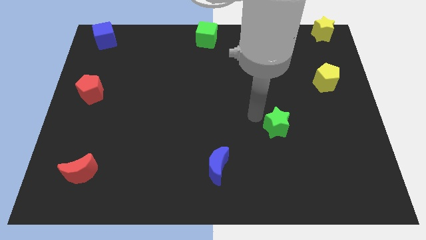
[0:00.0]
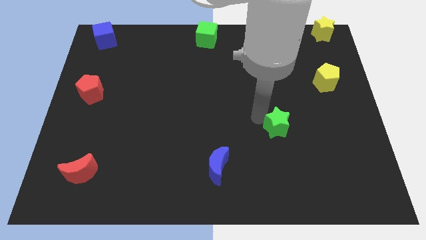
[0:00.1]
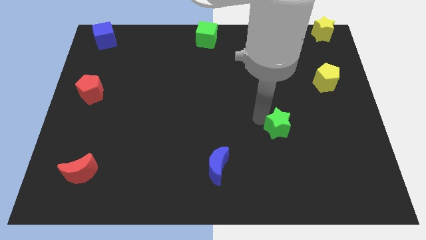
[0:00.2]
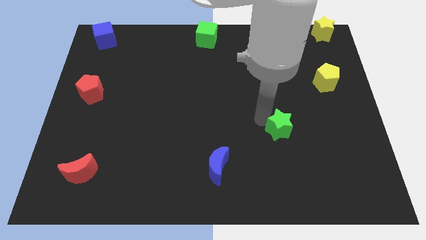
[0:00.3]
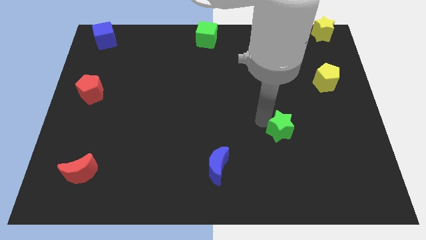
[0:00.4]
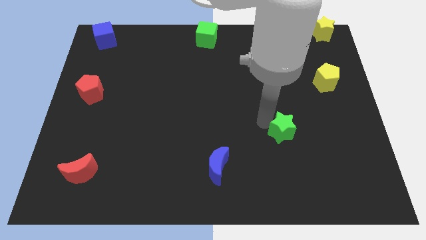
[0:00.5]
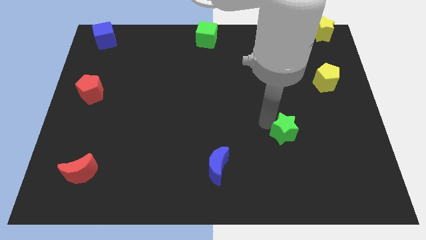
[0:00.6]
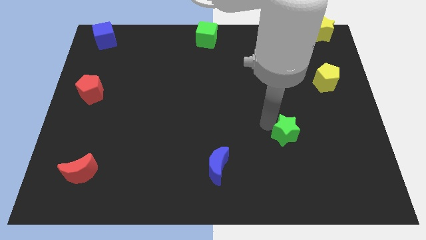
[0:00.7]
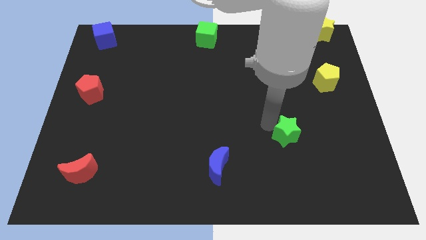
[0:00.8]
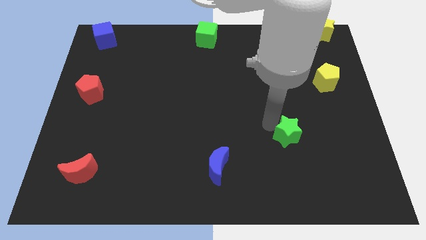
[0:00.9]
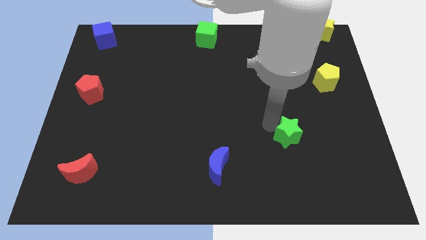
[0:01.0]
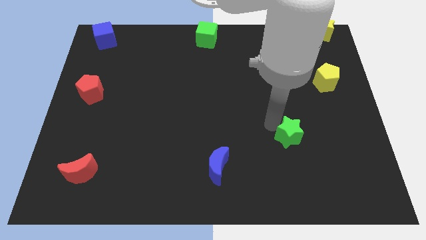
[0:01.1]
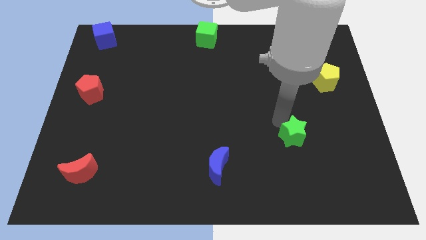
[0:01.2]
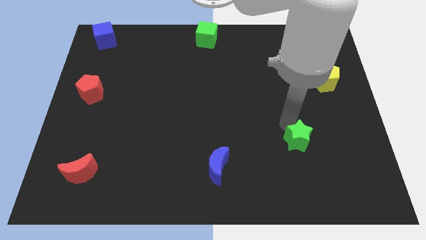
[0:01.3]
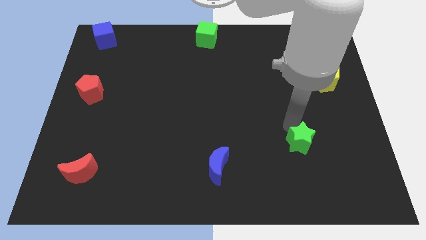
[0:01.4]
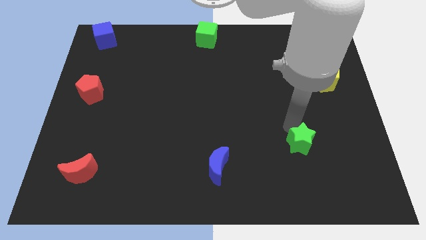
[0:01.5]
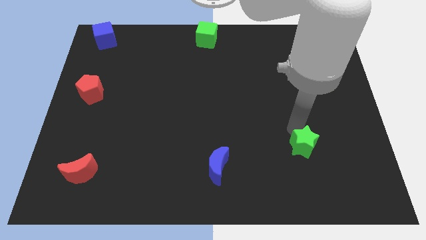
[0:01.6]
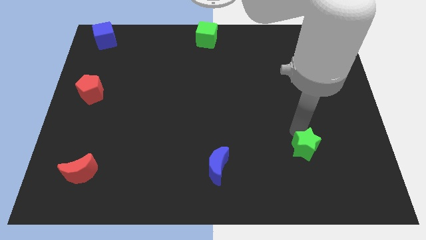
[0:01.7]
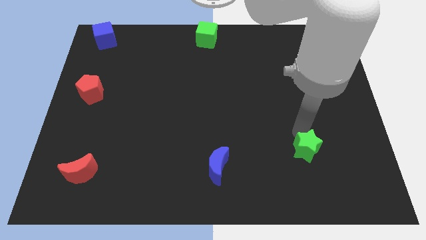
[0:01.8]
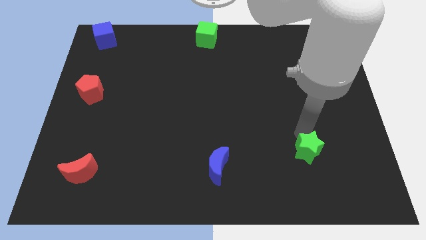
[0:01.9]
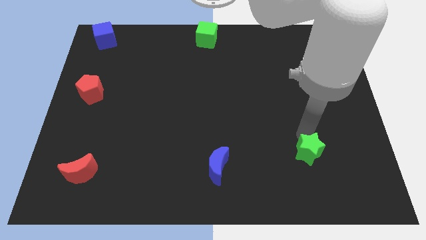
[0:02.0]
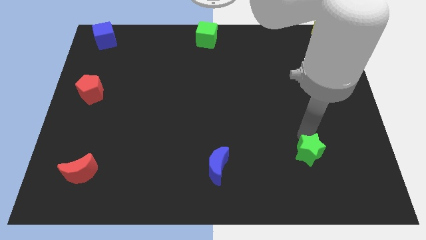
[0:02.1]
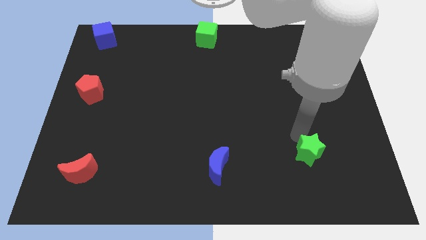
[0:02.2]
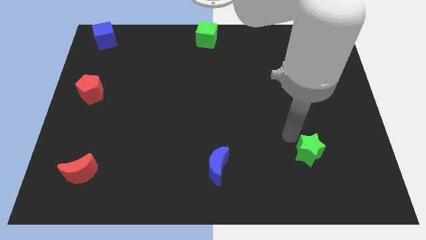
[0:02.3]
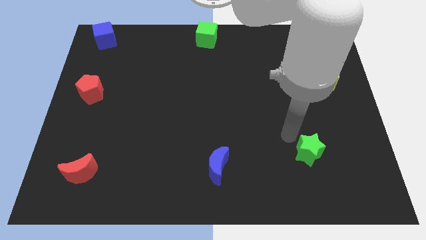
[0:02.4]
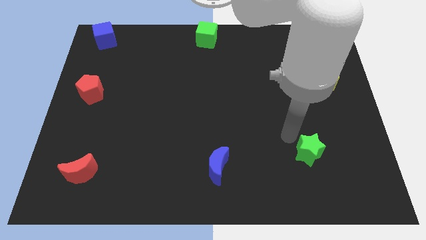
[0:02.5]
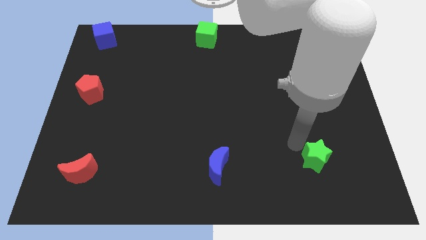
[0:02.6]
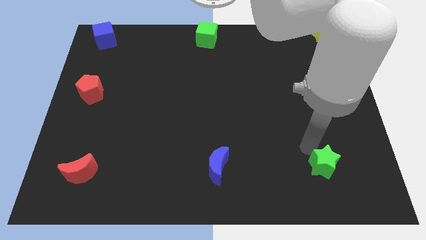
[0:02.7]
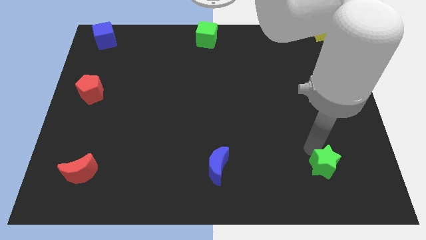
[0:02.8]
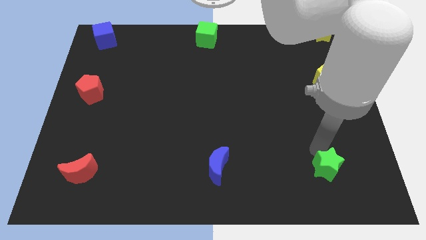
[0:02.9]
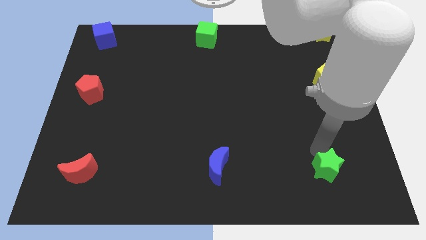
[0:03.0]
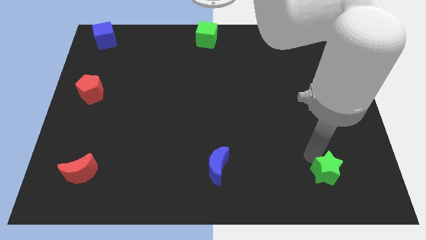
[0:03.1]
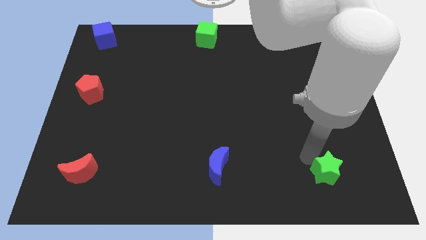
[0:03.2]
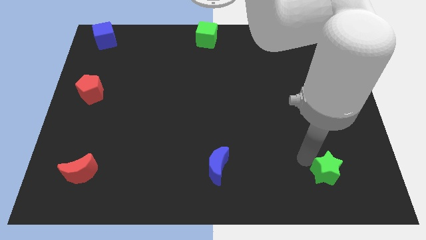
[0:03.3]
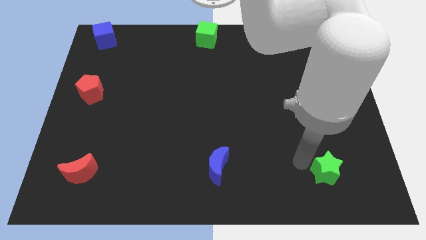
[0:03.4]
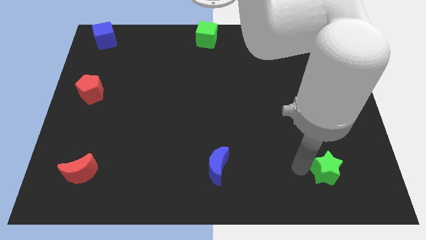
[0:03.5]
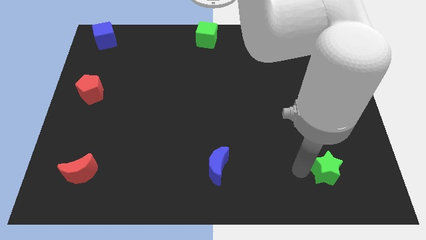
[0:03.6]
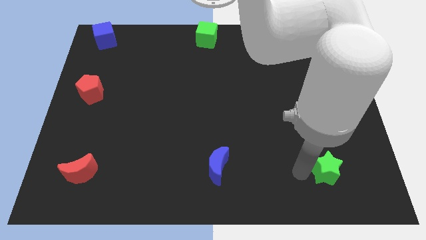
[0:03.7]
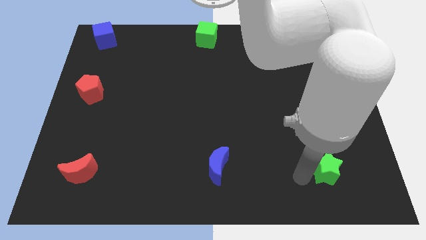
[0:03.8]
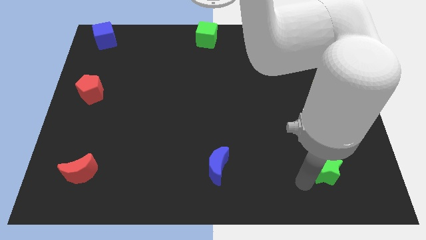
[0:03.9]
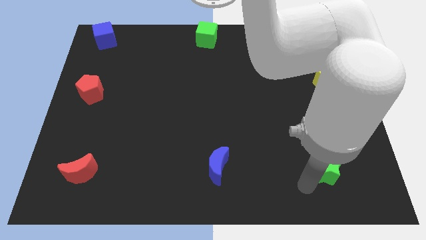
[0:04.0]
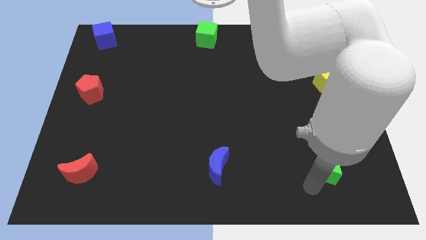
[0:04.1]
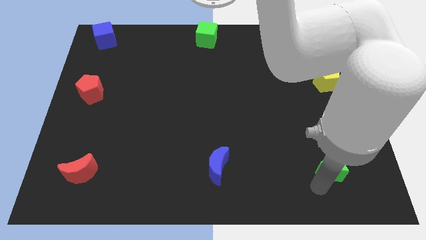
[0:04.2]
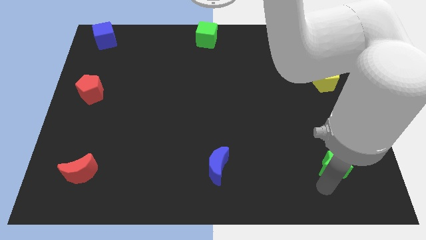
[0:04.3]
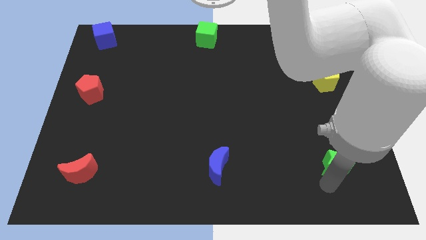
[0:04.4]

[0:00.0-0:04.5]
move the green star towards the right bottom of the board

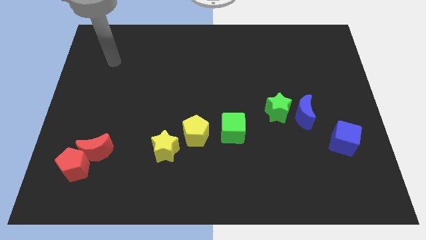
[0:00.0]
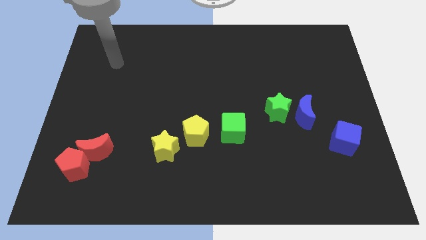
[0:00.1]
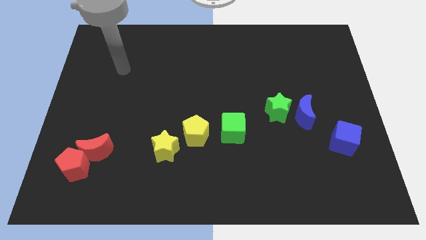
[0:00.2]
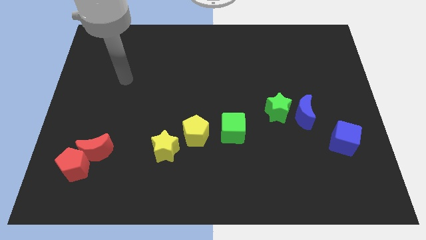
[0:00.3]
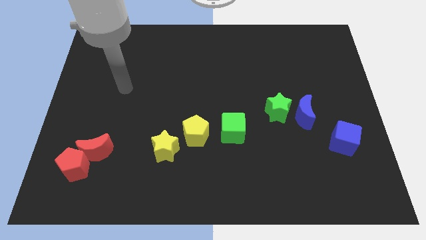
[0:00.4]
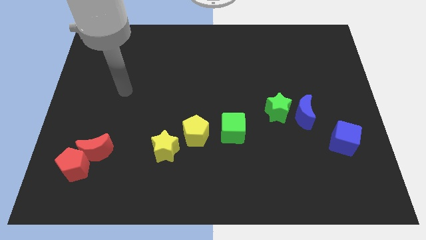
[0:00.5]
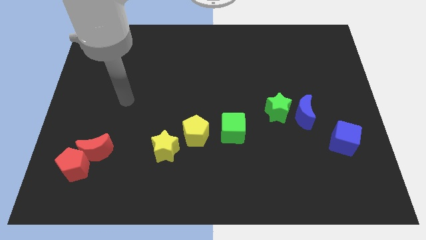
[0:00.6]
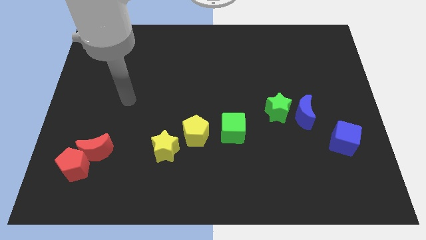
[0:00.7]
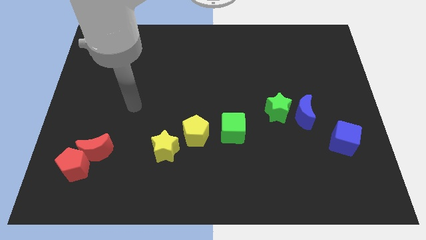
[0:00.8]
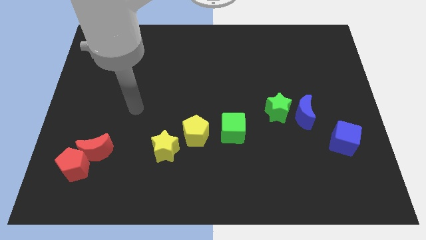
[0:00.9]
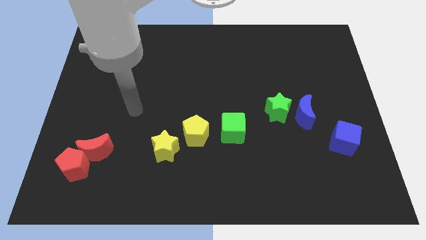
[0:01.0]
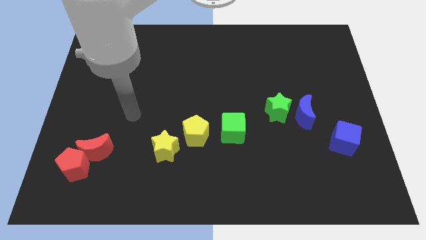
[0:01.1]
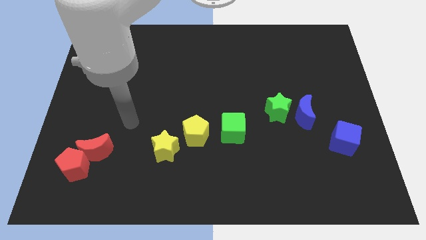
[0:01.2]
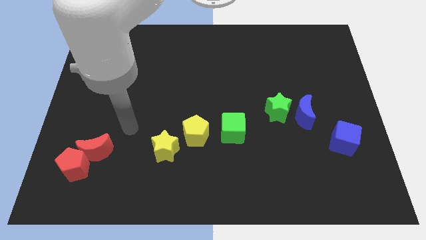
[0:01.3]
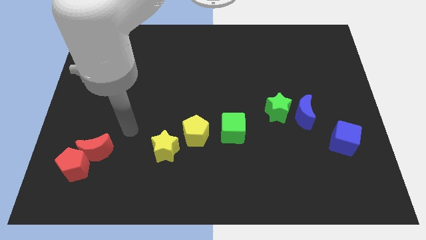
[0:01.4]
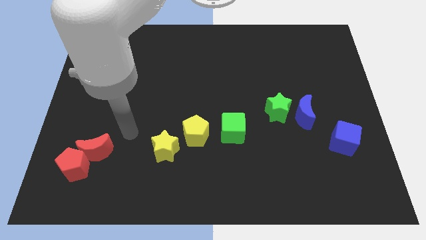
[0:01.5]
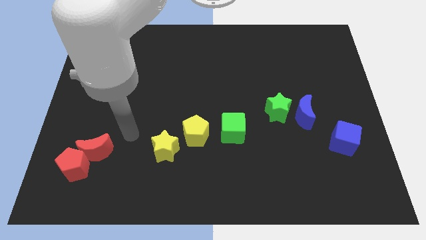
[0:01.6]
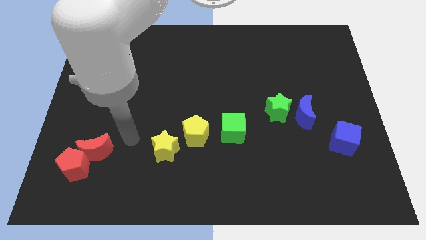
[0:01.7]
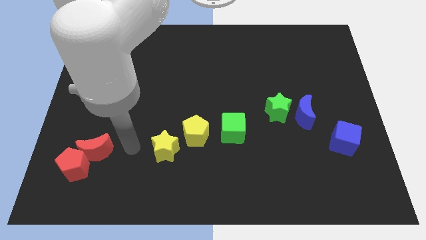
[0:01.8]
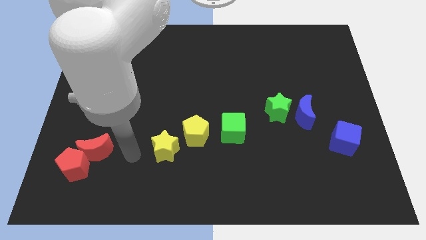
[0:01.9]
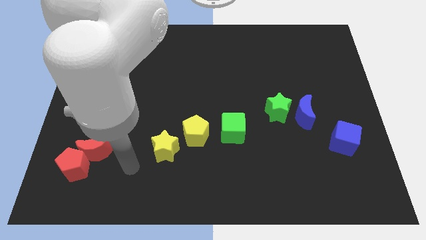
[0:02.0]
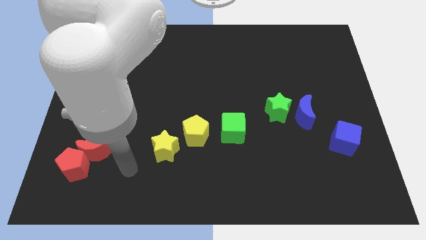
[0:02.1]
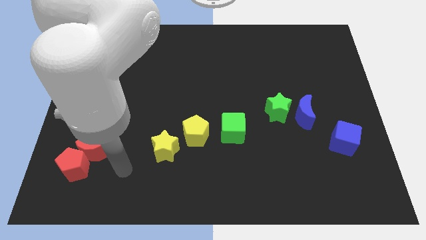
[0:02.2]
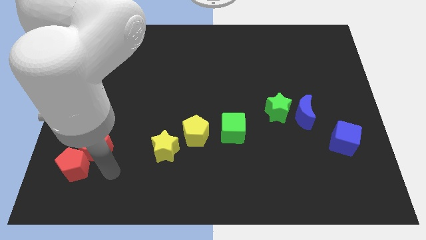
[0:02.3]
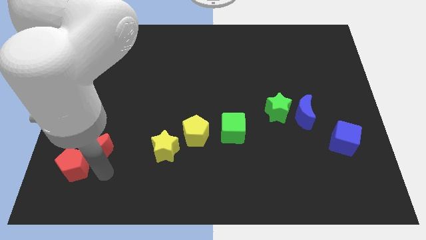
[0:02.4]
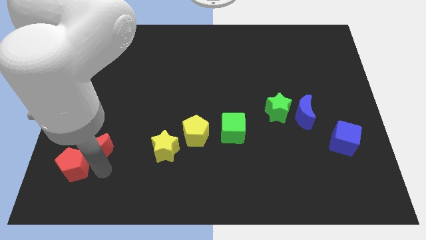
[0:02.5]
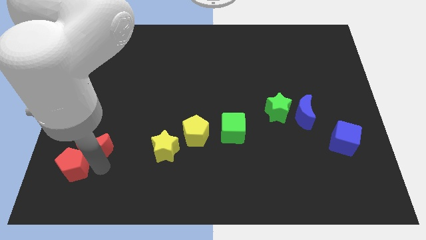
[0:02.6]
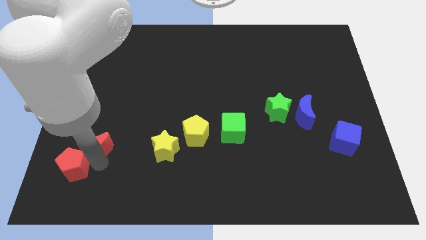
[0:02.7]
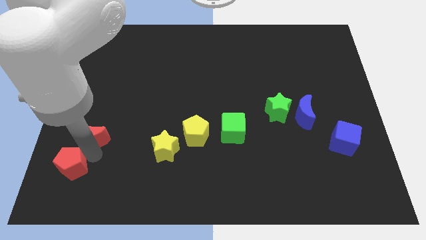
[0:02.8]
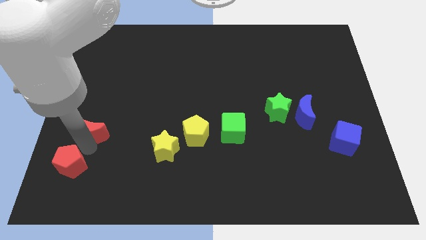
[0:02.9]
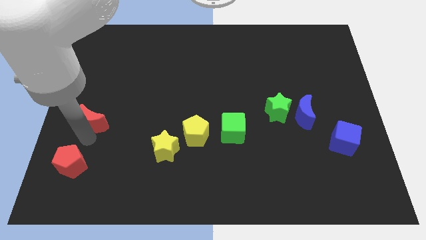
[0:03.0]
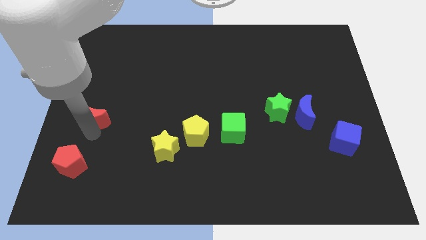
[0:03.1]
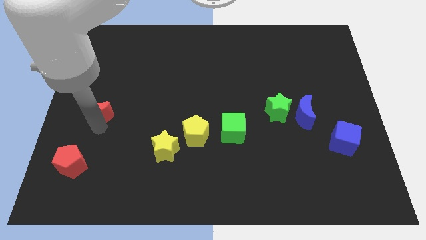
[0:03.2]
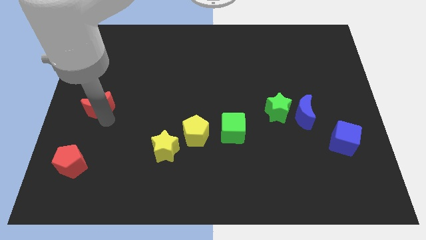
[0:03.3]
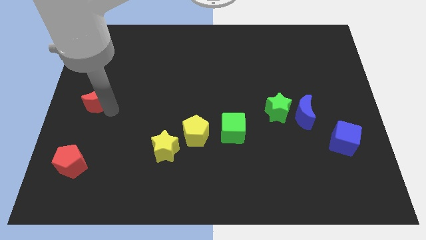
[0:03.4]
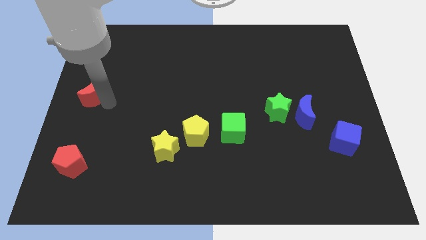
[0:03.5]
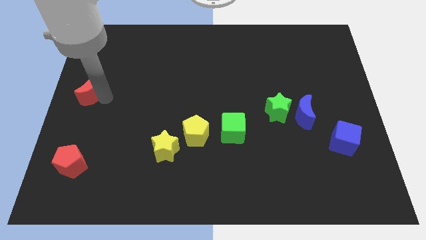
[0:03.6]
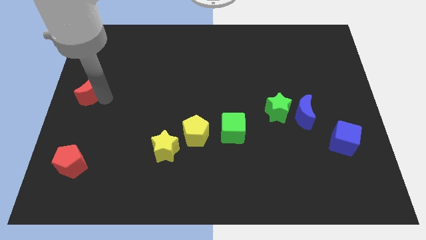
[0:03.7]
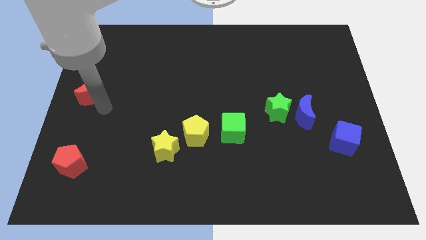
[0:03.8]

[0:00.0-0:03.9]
push red oon towards middle of the board

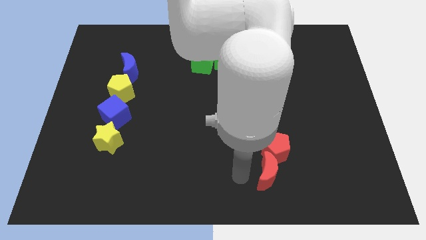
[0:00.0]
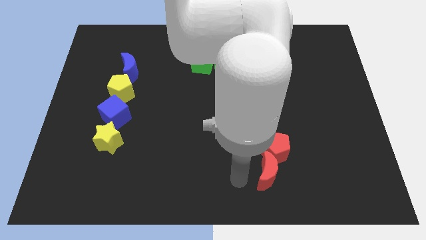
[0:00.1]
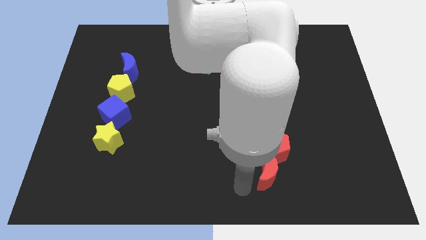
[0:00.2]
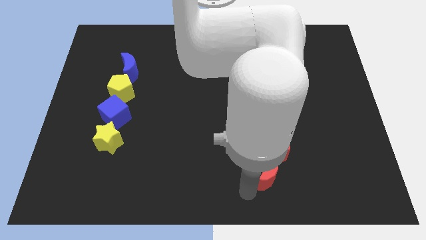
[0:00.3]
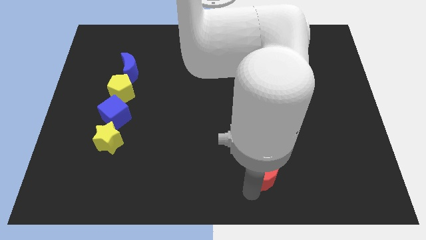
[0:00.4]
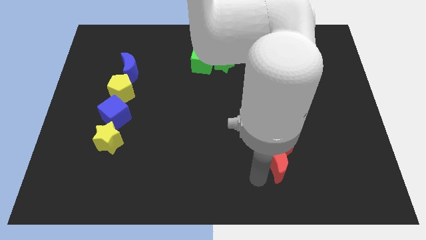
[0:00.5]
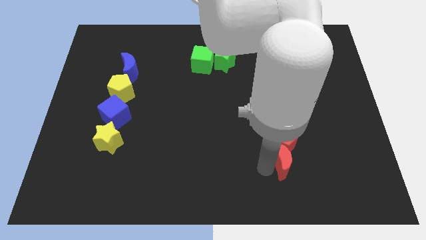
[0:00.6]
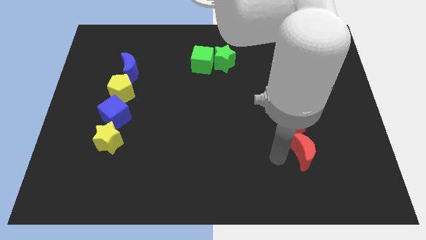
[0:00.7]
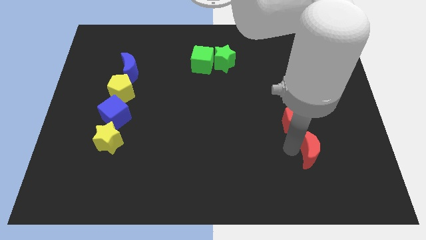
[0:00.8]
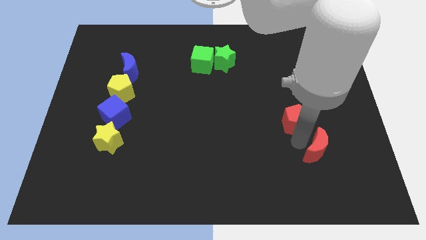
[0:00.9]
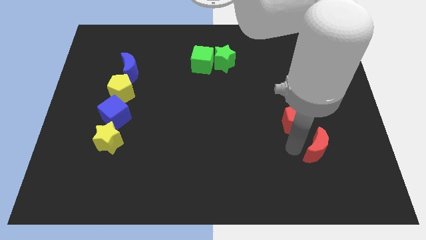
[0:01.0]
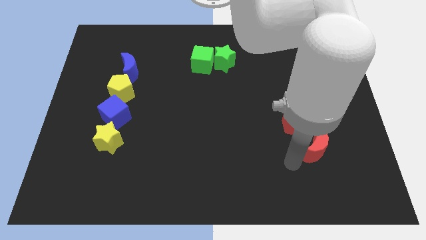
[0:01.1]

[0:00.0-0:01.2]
separate red moon from red pentagon
